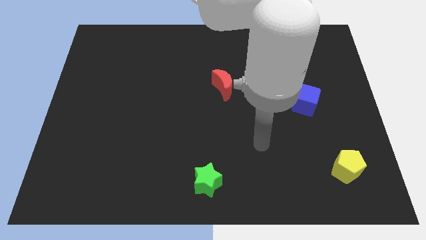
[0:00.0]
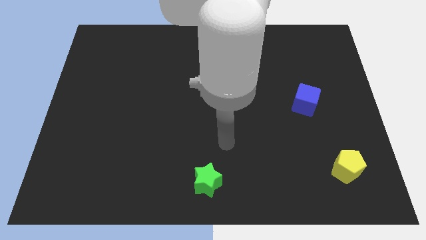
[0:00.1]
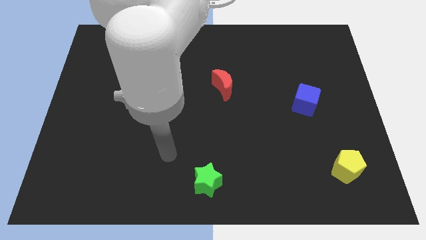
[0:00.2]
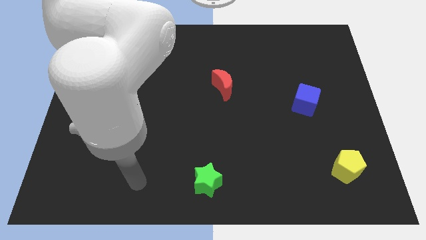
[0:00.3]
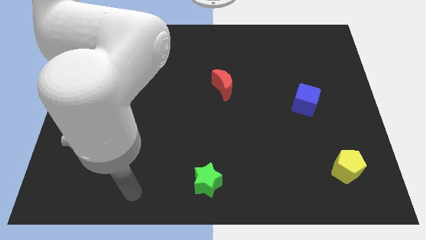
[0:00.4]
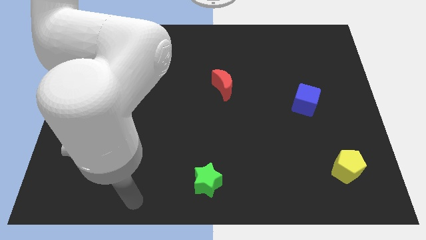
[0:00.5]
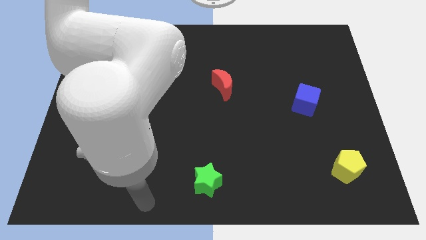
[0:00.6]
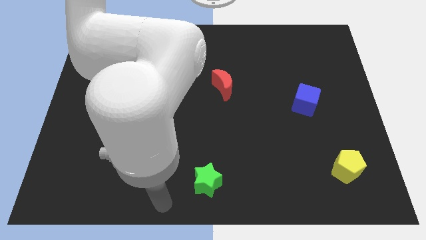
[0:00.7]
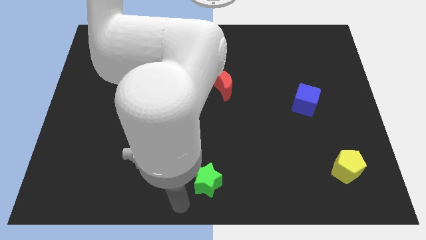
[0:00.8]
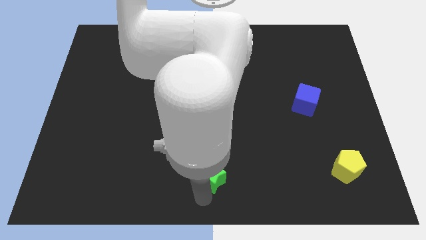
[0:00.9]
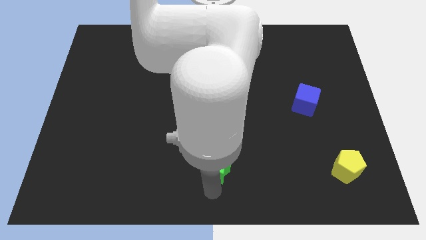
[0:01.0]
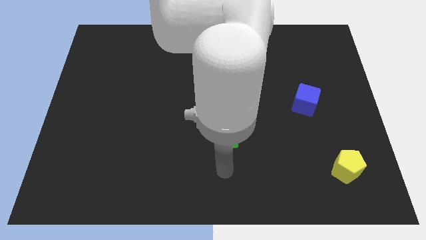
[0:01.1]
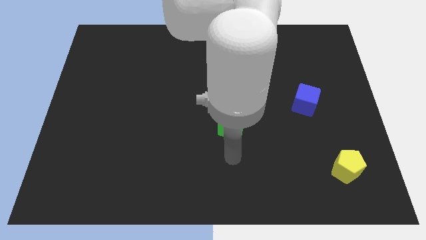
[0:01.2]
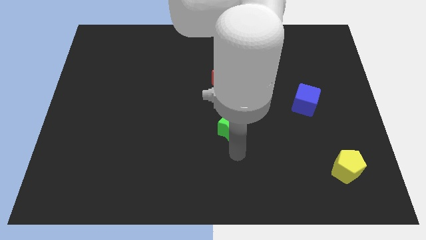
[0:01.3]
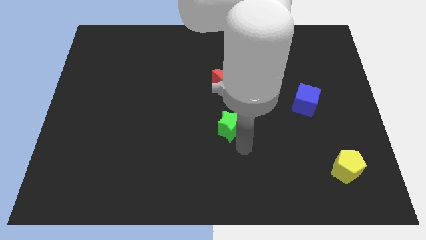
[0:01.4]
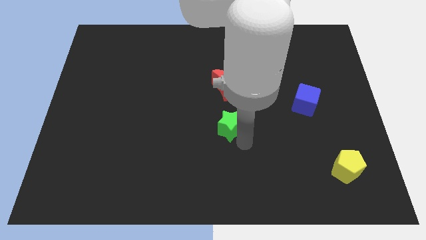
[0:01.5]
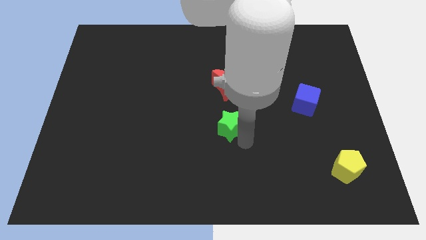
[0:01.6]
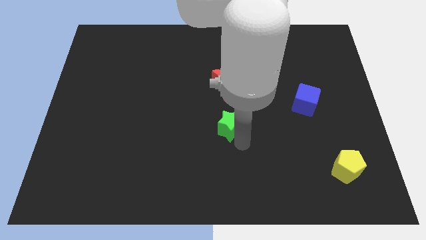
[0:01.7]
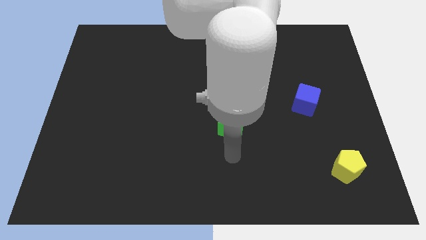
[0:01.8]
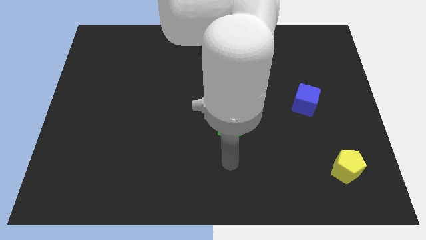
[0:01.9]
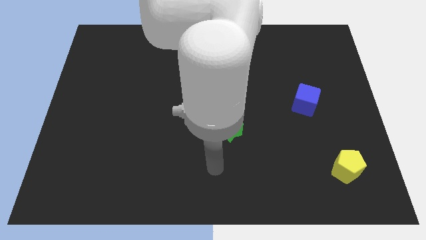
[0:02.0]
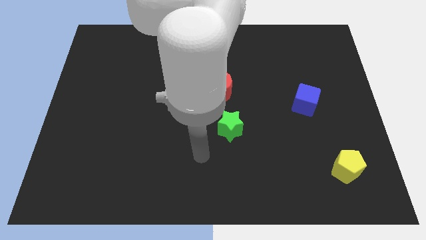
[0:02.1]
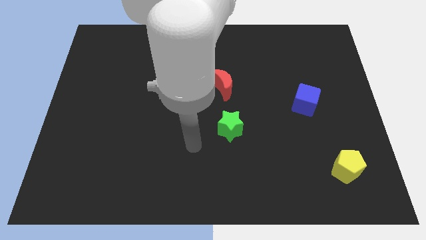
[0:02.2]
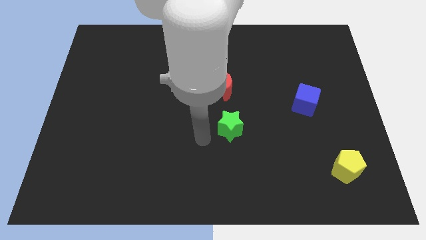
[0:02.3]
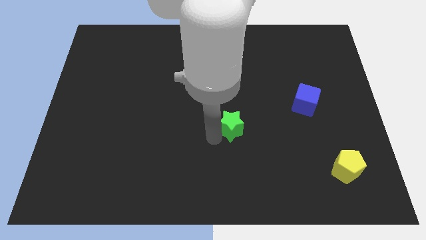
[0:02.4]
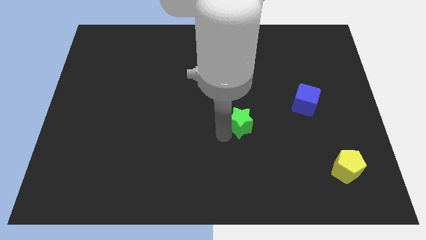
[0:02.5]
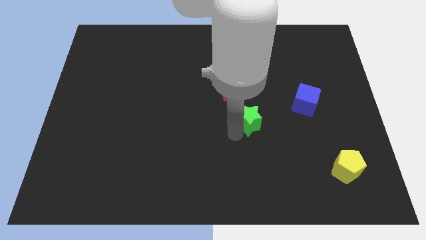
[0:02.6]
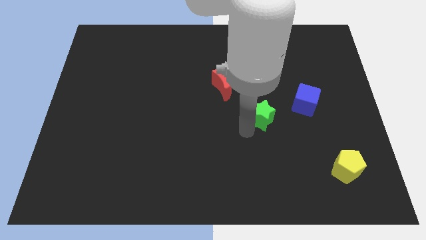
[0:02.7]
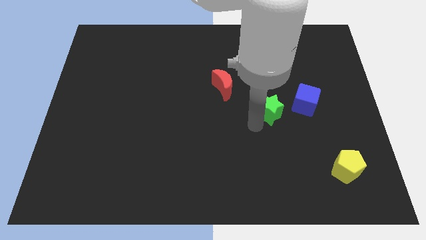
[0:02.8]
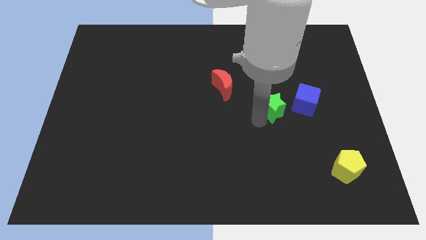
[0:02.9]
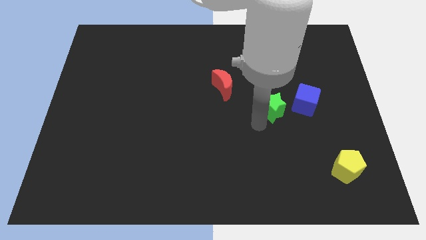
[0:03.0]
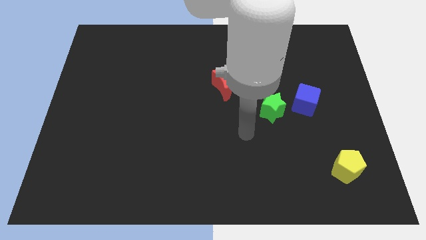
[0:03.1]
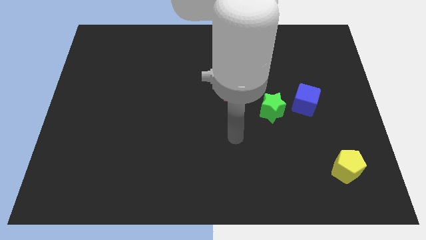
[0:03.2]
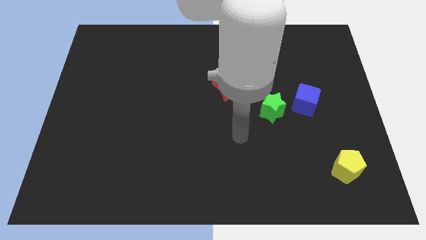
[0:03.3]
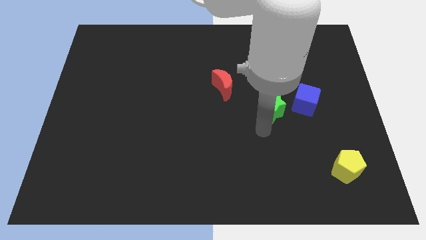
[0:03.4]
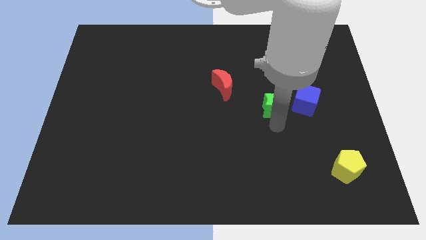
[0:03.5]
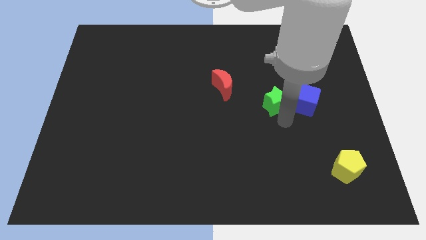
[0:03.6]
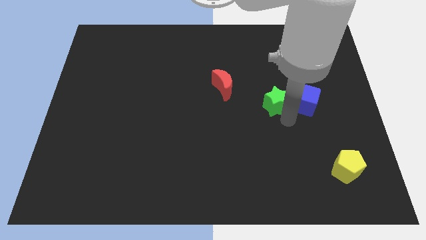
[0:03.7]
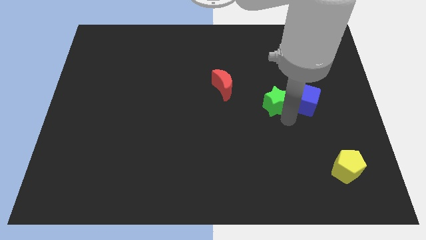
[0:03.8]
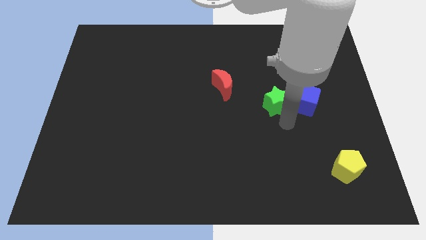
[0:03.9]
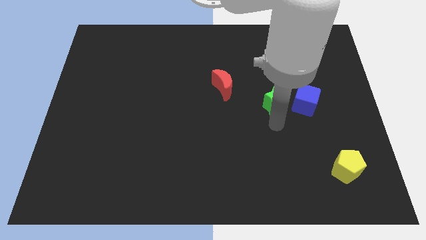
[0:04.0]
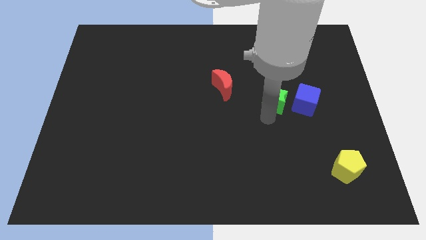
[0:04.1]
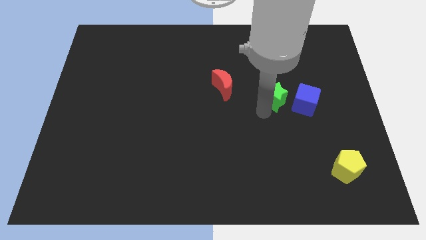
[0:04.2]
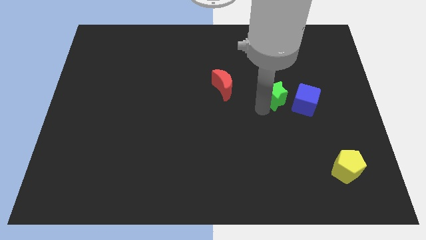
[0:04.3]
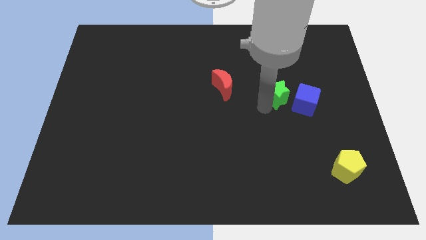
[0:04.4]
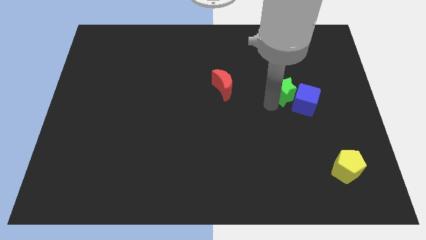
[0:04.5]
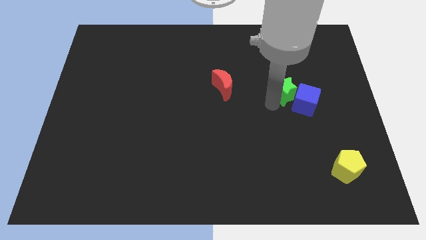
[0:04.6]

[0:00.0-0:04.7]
move the green block close to the blue block

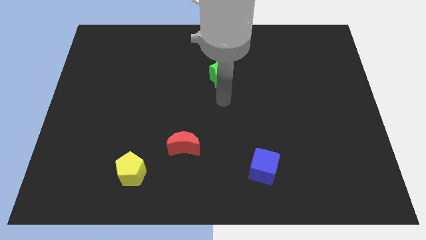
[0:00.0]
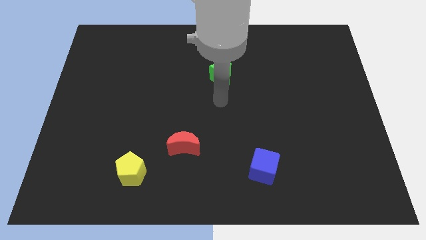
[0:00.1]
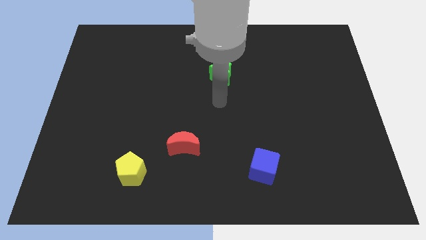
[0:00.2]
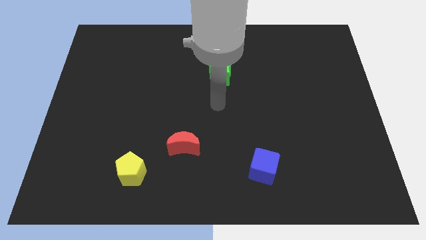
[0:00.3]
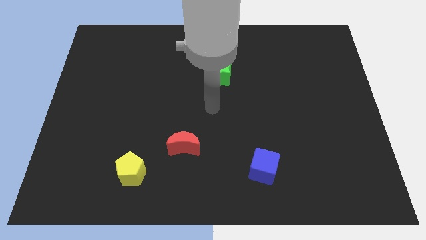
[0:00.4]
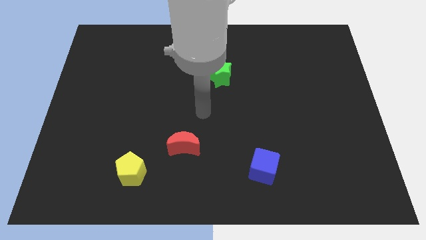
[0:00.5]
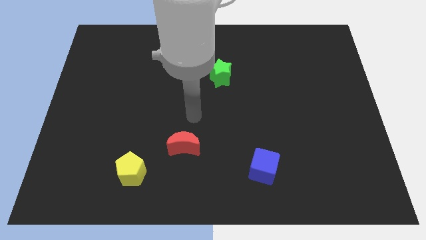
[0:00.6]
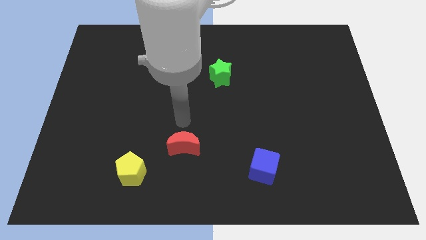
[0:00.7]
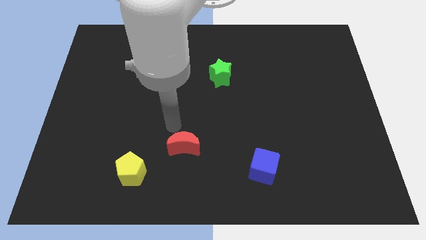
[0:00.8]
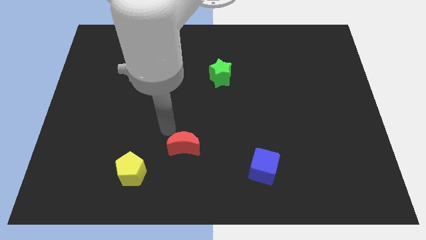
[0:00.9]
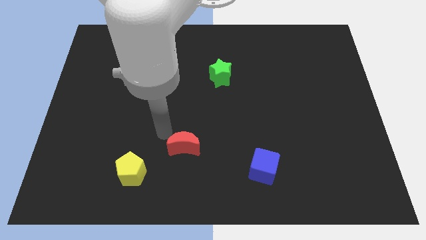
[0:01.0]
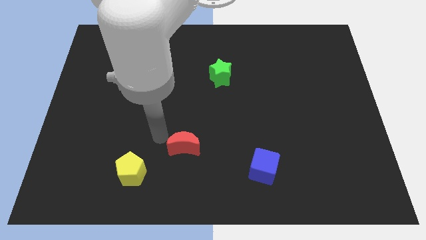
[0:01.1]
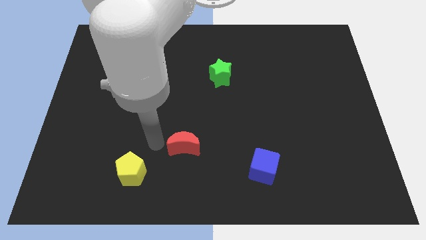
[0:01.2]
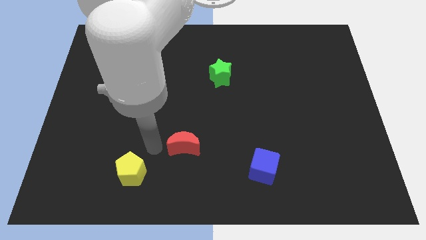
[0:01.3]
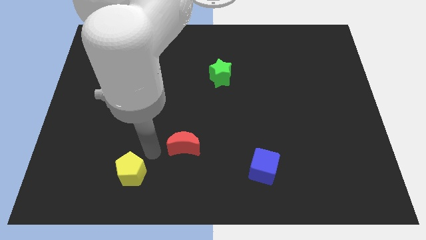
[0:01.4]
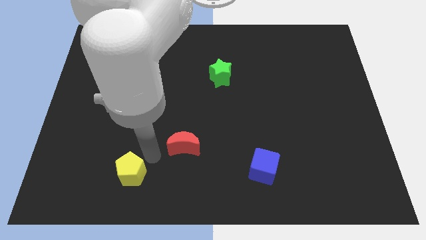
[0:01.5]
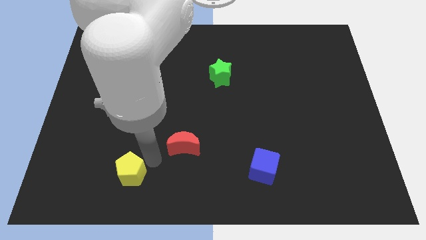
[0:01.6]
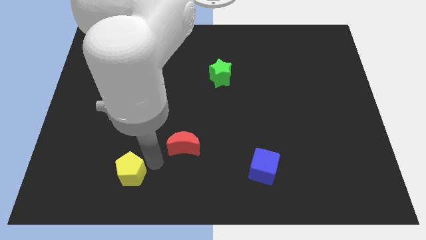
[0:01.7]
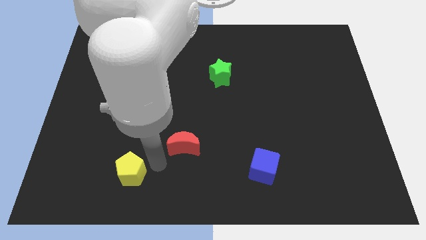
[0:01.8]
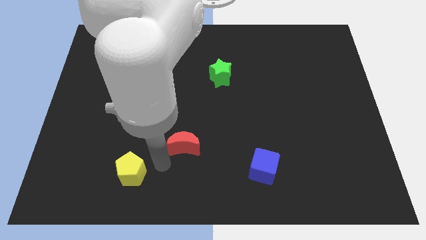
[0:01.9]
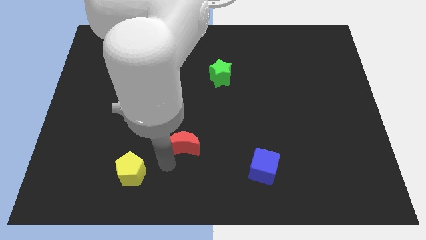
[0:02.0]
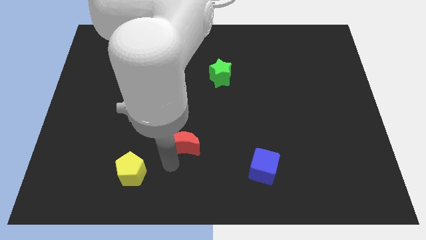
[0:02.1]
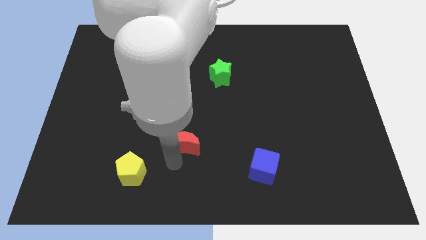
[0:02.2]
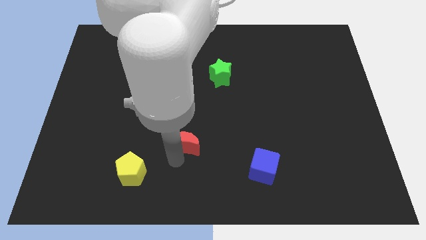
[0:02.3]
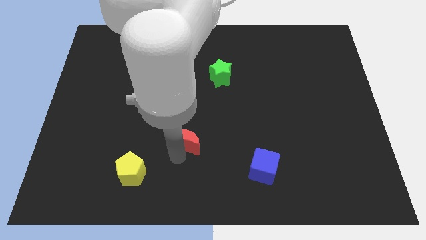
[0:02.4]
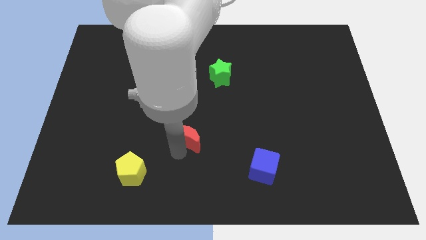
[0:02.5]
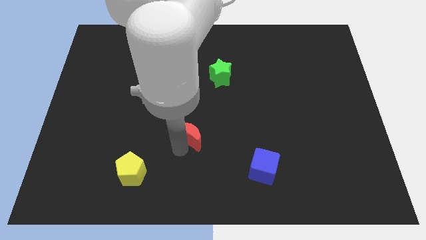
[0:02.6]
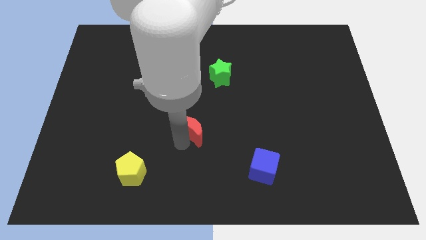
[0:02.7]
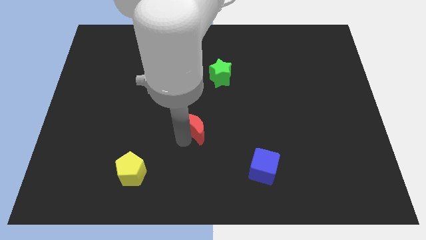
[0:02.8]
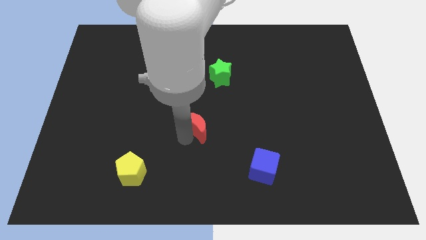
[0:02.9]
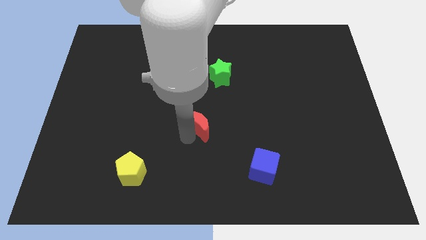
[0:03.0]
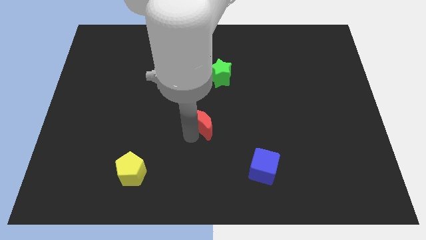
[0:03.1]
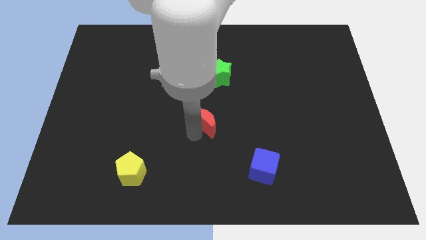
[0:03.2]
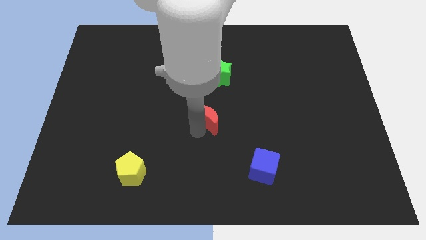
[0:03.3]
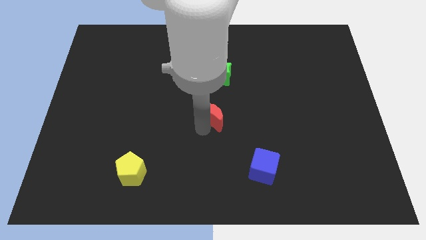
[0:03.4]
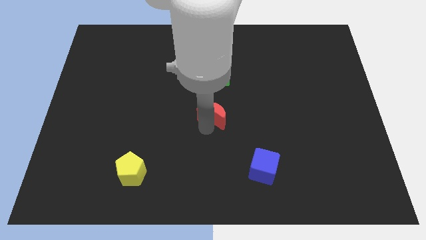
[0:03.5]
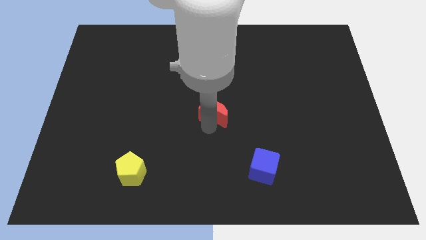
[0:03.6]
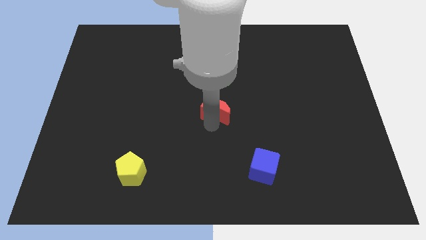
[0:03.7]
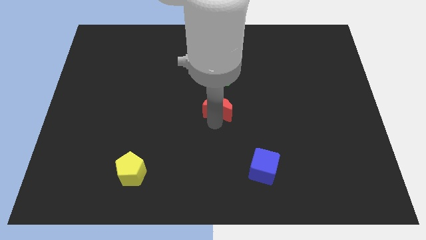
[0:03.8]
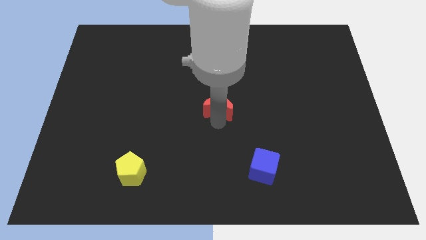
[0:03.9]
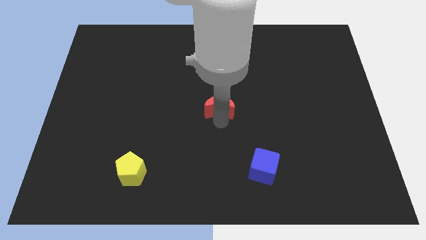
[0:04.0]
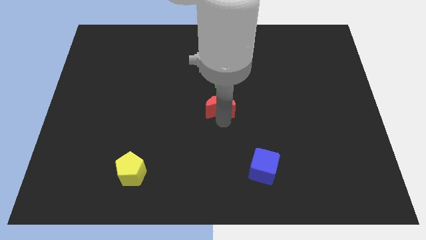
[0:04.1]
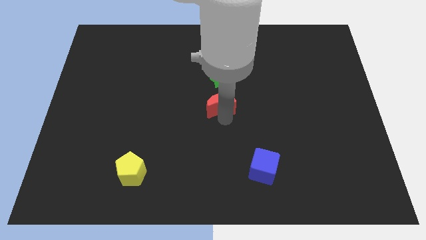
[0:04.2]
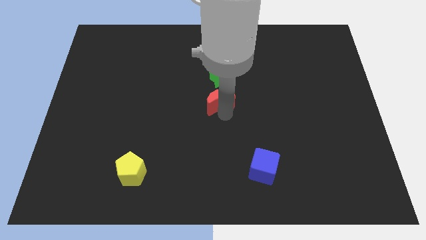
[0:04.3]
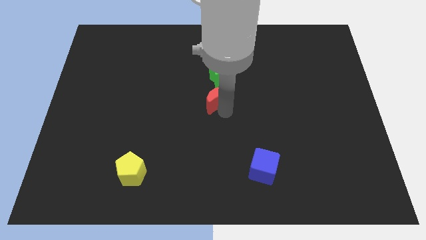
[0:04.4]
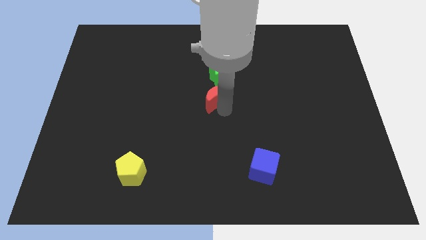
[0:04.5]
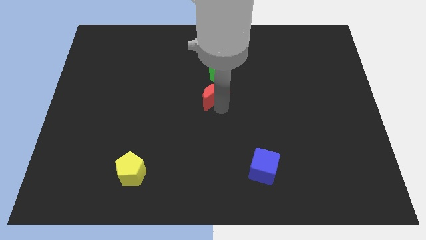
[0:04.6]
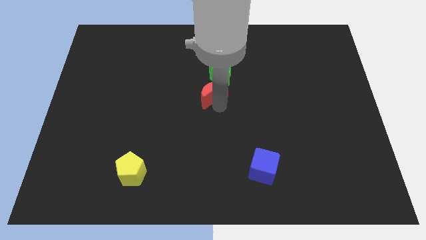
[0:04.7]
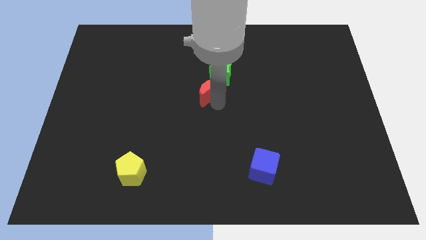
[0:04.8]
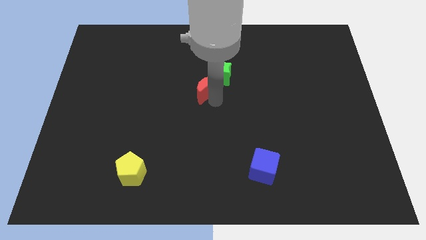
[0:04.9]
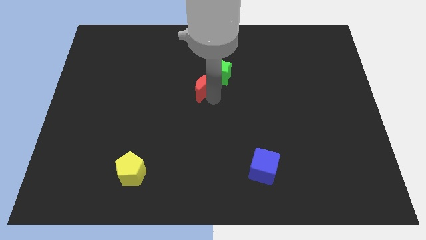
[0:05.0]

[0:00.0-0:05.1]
slide the moon towards the star
